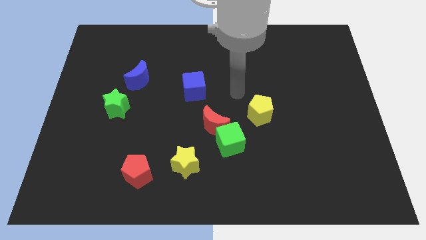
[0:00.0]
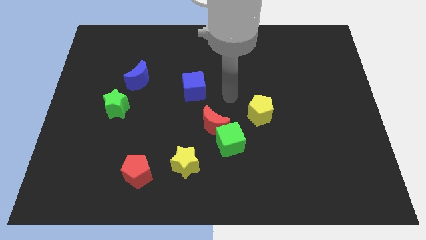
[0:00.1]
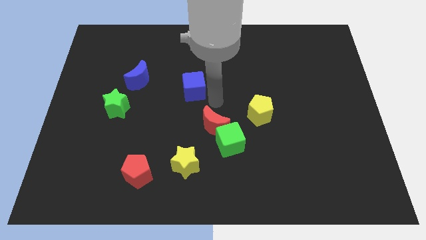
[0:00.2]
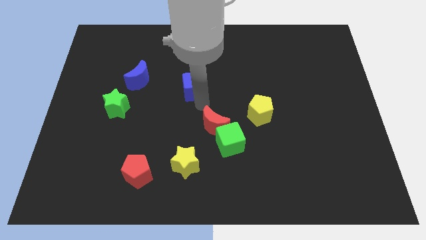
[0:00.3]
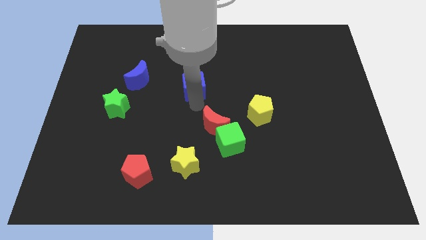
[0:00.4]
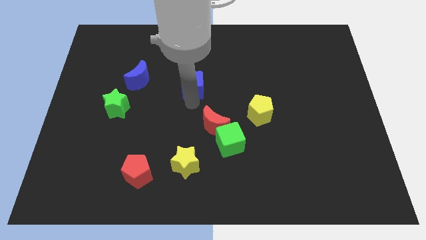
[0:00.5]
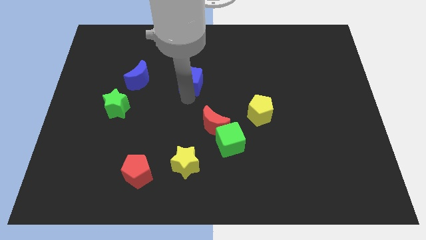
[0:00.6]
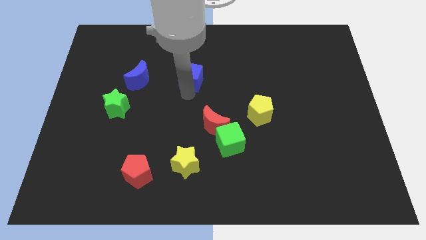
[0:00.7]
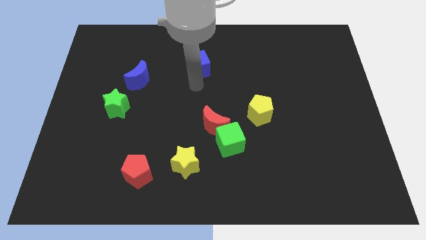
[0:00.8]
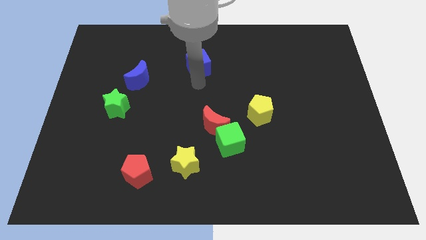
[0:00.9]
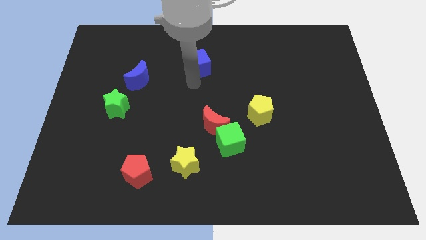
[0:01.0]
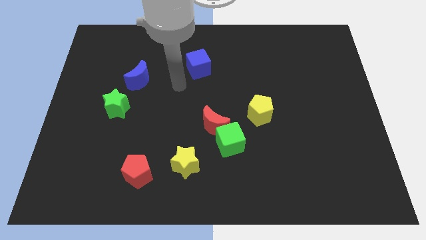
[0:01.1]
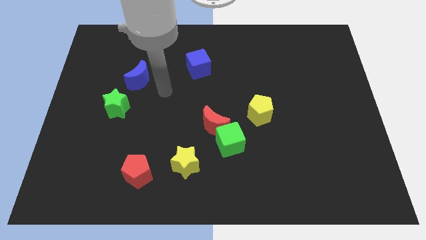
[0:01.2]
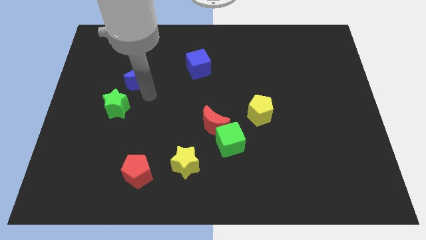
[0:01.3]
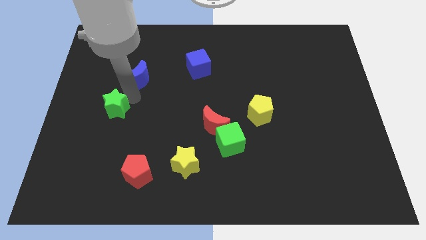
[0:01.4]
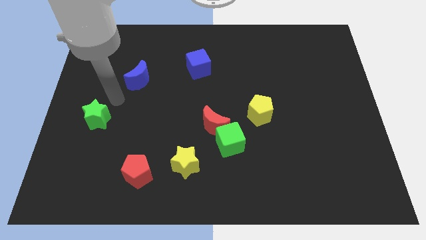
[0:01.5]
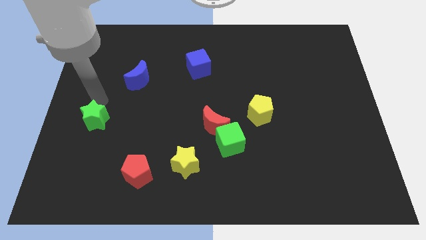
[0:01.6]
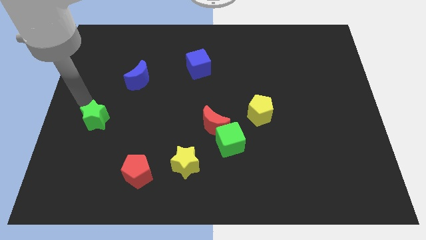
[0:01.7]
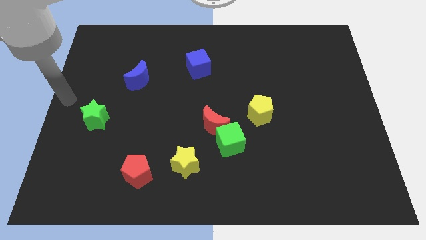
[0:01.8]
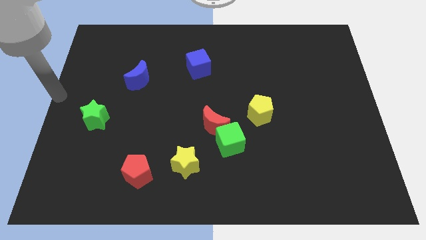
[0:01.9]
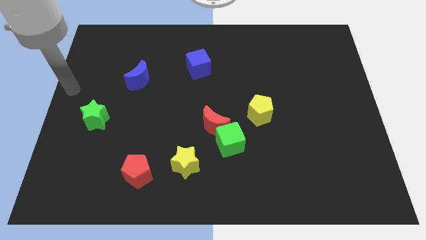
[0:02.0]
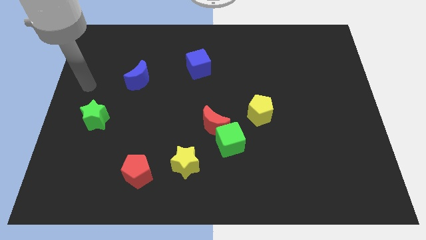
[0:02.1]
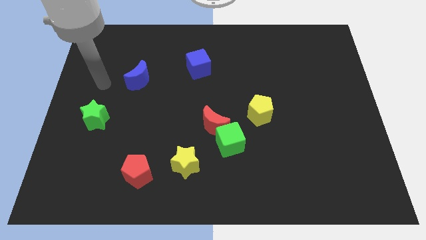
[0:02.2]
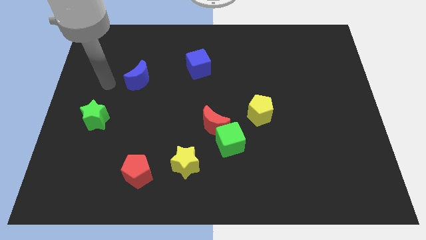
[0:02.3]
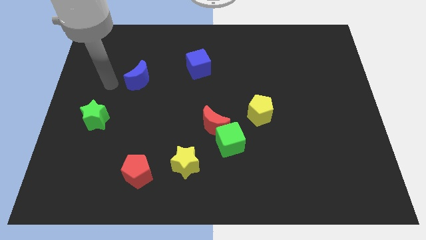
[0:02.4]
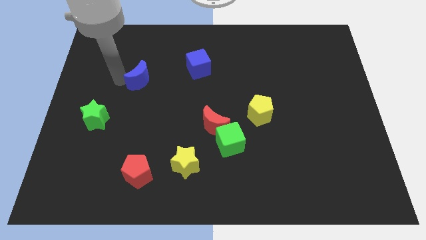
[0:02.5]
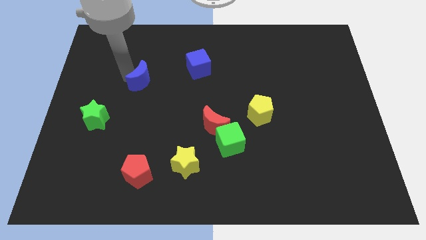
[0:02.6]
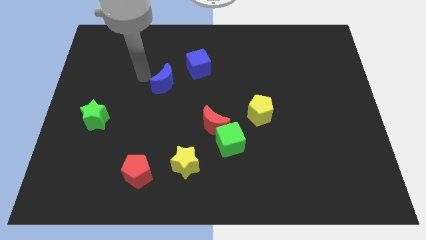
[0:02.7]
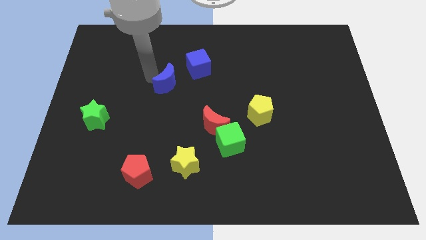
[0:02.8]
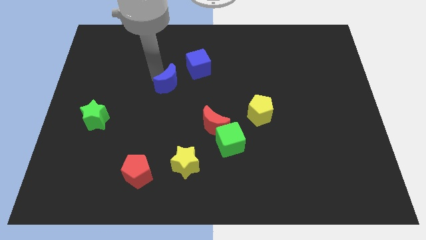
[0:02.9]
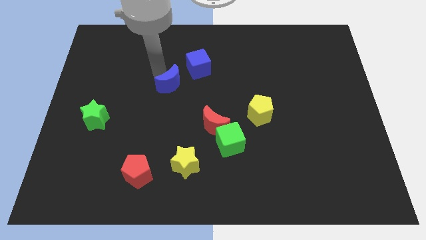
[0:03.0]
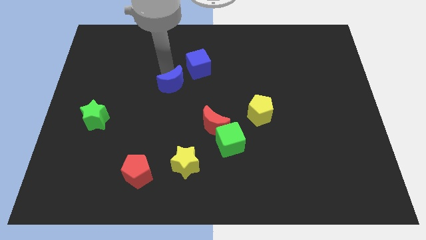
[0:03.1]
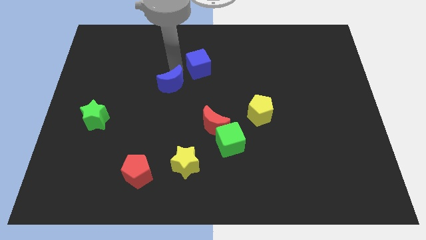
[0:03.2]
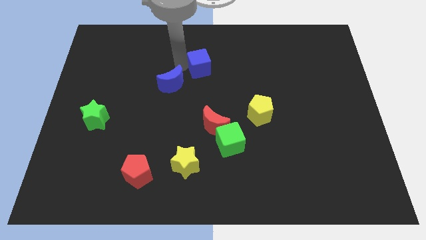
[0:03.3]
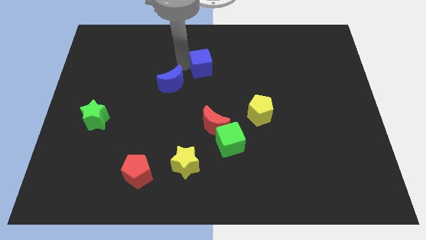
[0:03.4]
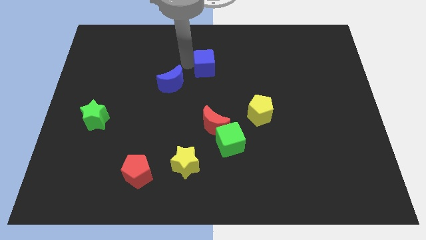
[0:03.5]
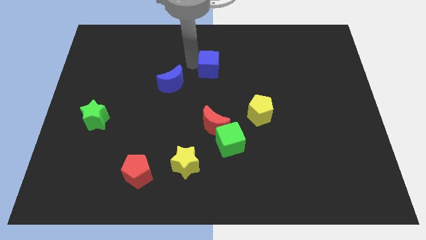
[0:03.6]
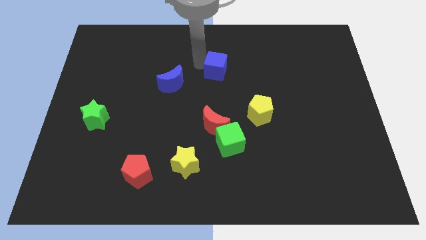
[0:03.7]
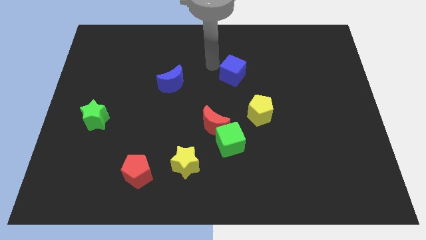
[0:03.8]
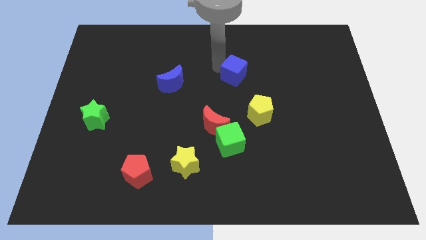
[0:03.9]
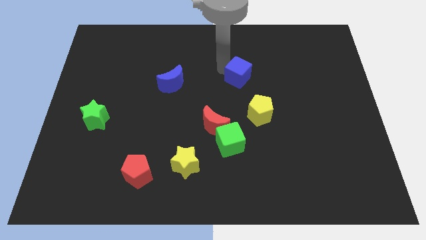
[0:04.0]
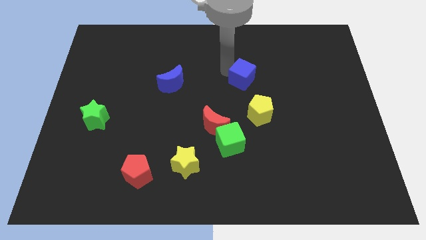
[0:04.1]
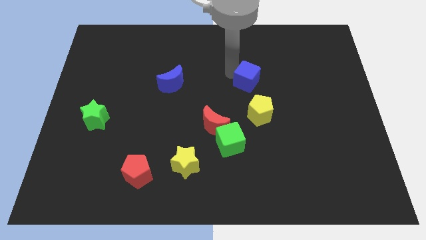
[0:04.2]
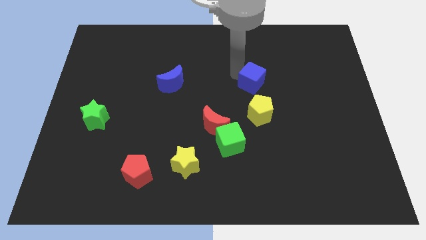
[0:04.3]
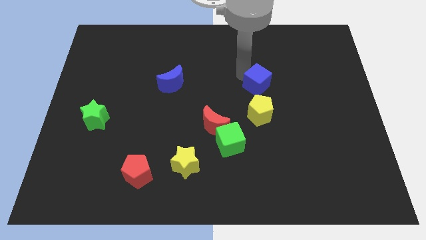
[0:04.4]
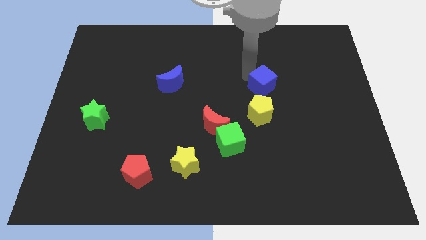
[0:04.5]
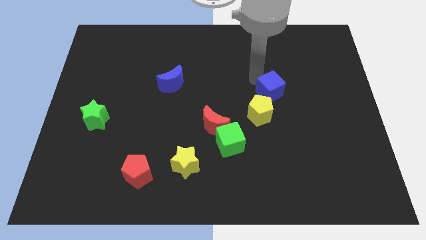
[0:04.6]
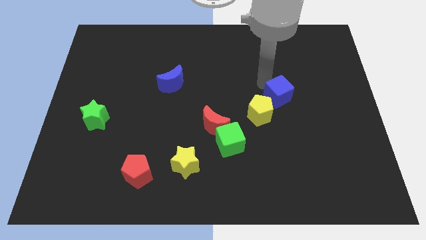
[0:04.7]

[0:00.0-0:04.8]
place the blue cube above the yellow pentagon

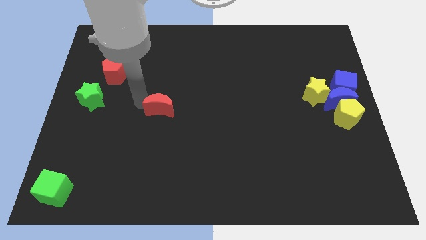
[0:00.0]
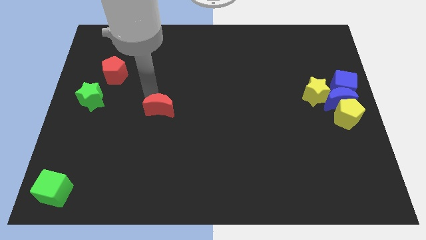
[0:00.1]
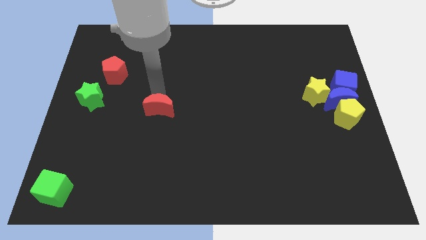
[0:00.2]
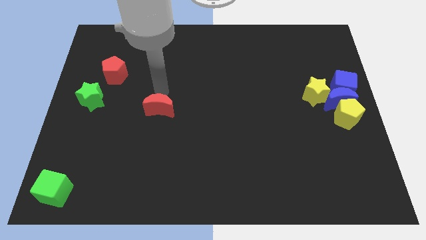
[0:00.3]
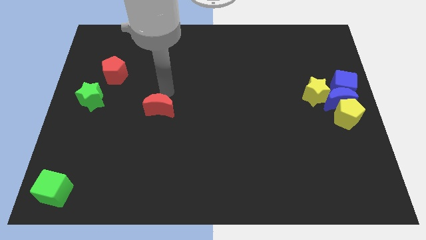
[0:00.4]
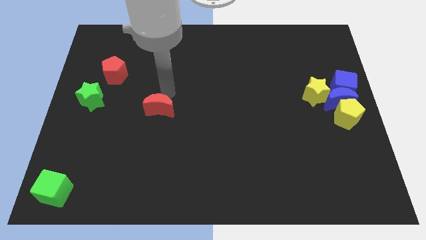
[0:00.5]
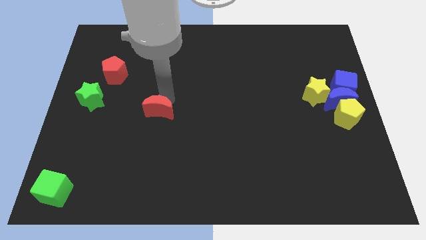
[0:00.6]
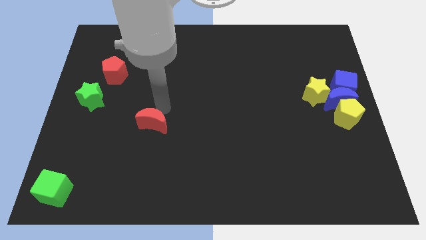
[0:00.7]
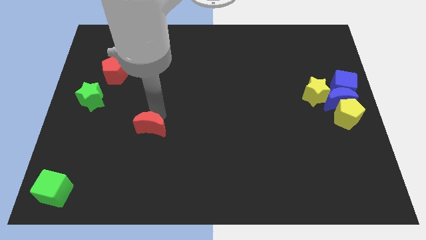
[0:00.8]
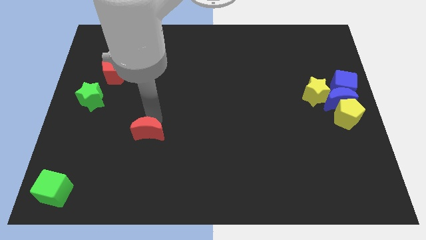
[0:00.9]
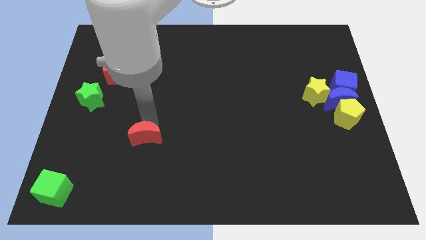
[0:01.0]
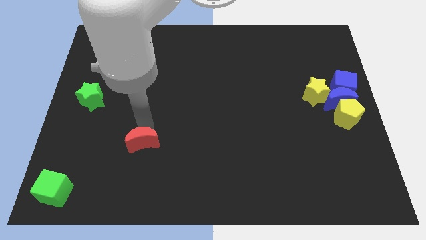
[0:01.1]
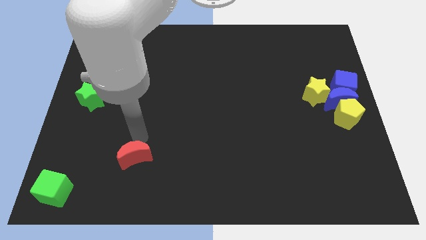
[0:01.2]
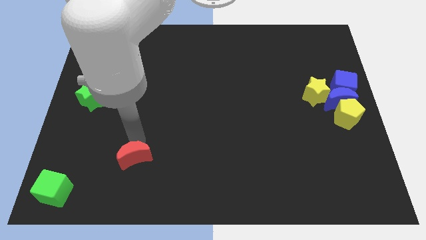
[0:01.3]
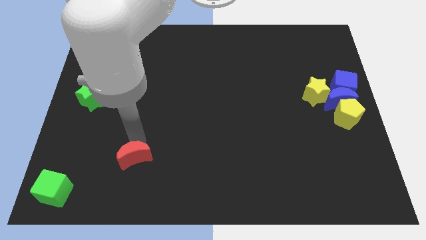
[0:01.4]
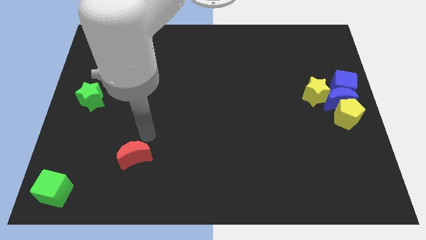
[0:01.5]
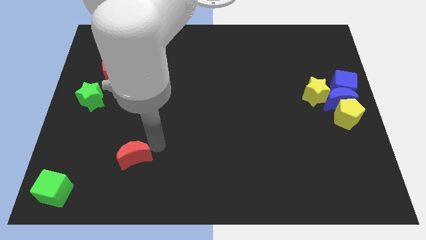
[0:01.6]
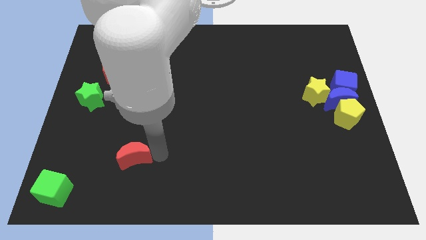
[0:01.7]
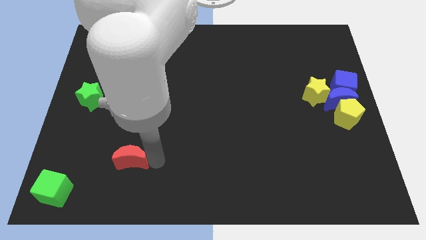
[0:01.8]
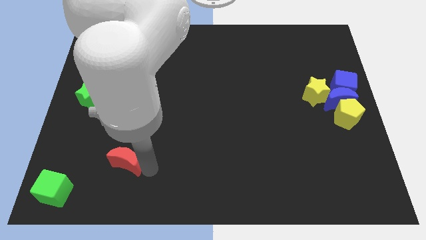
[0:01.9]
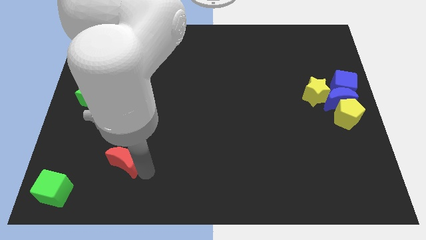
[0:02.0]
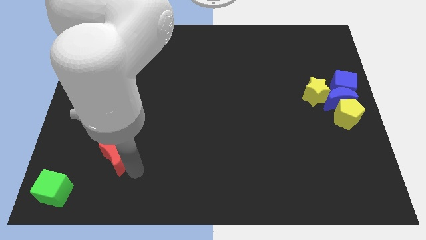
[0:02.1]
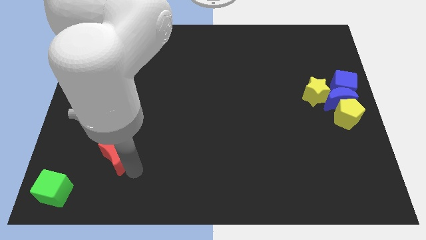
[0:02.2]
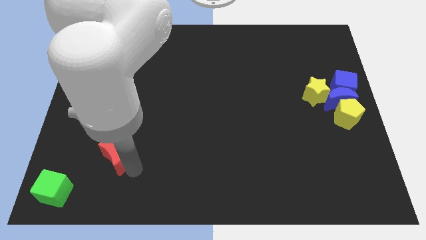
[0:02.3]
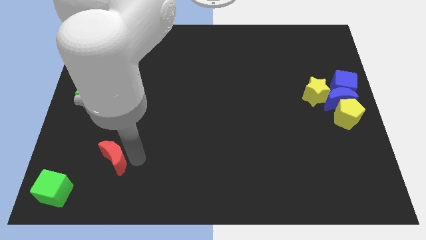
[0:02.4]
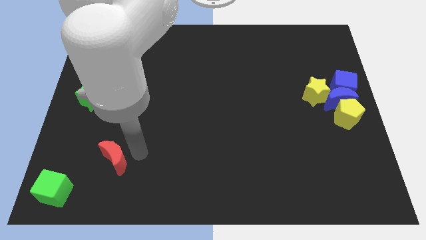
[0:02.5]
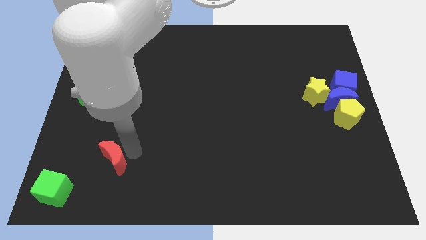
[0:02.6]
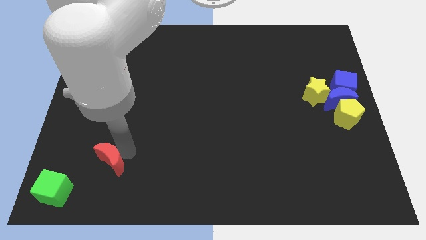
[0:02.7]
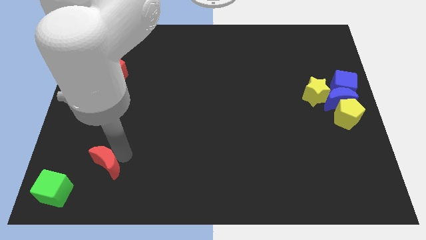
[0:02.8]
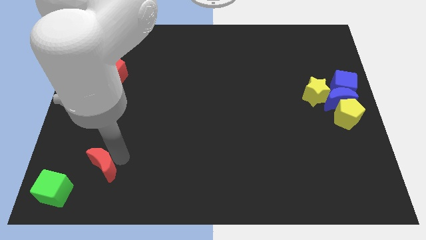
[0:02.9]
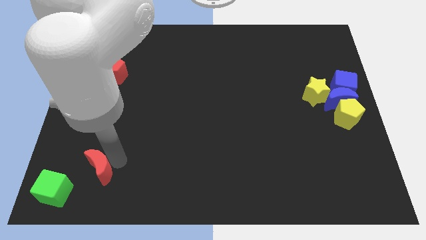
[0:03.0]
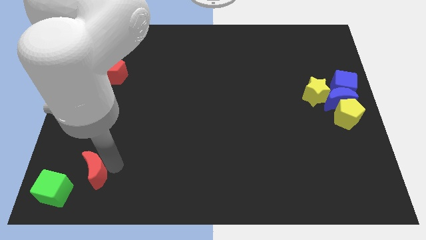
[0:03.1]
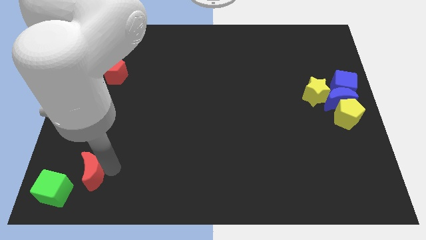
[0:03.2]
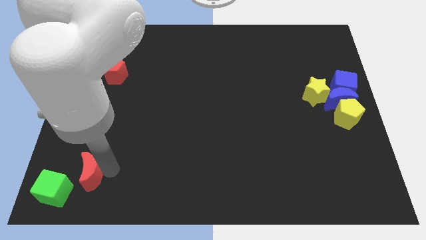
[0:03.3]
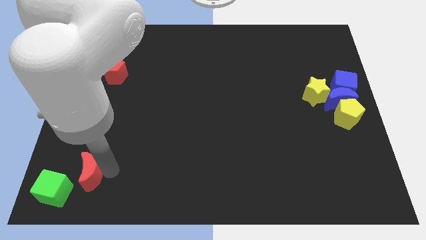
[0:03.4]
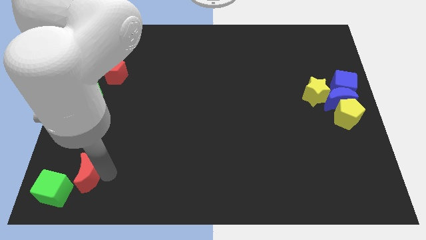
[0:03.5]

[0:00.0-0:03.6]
place red crescent below green star

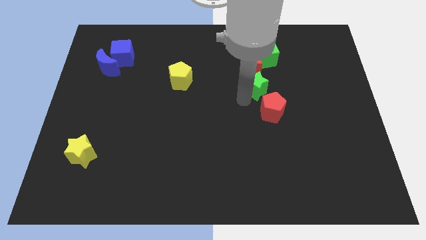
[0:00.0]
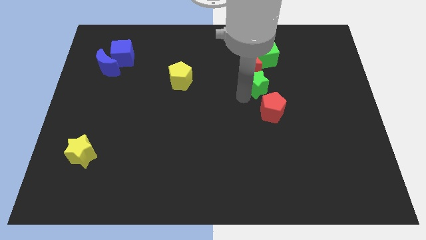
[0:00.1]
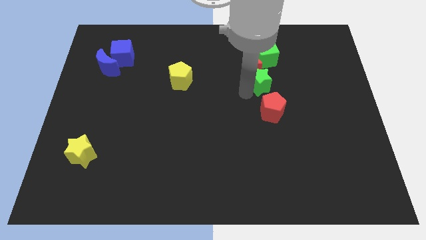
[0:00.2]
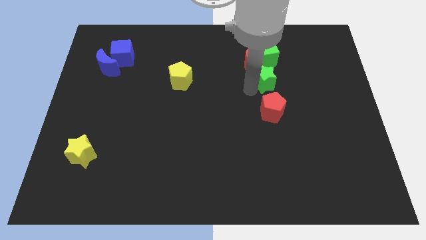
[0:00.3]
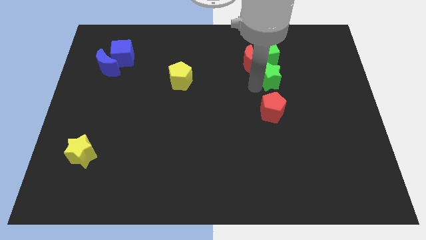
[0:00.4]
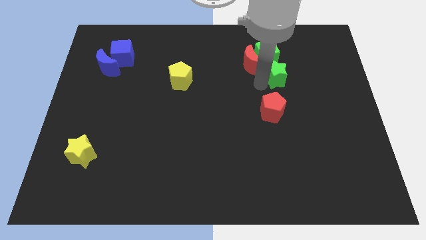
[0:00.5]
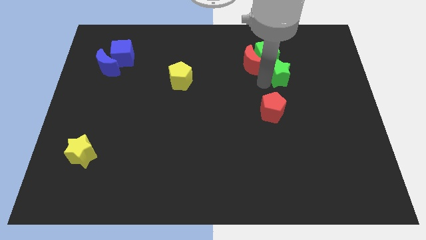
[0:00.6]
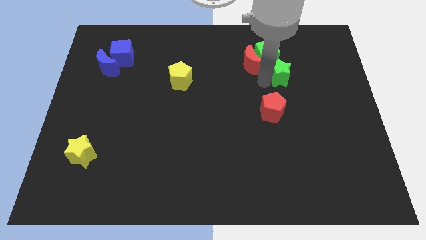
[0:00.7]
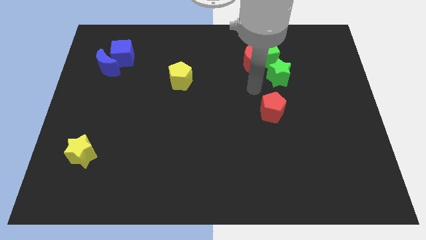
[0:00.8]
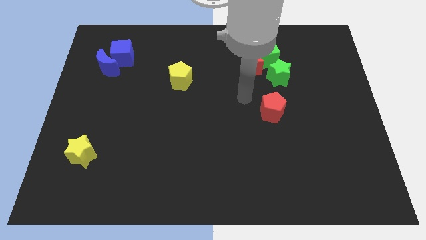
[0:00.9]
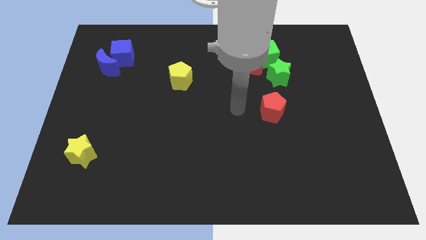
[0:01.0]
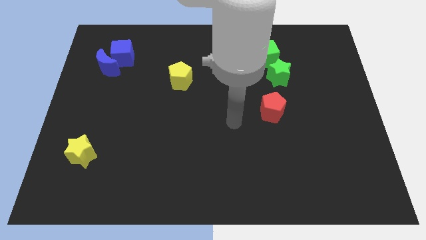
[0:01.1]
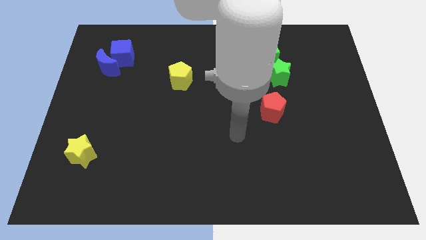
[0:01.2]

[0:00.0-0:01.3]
move the green star below to the green cube
